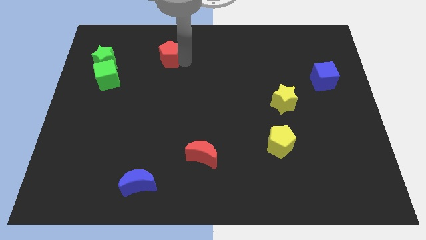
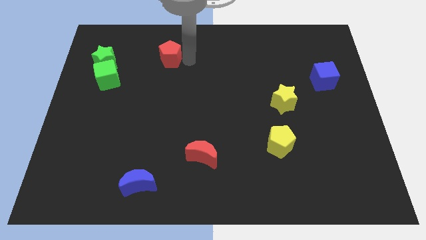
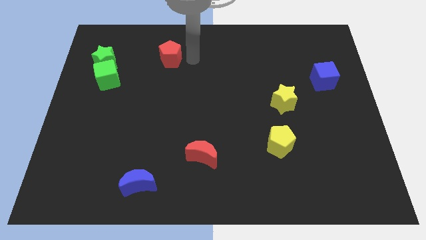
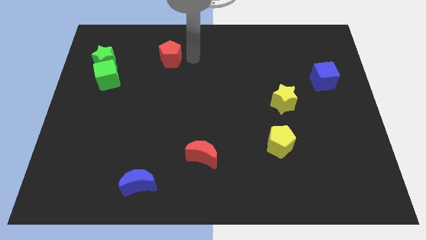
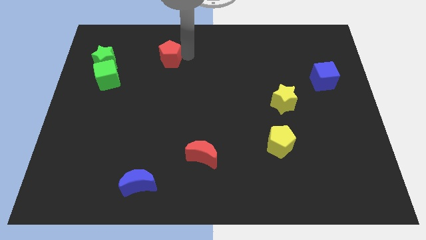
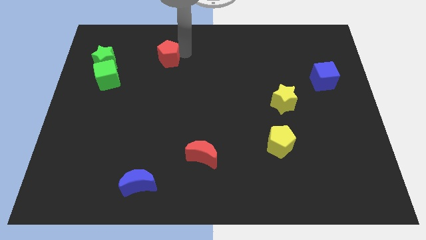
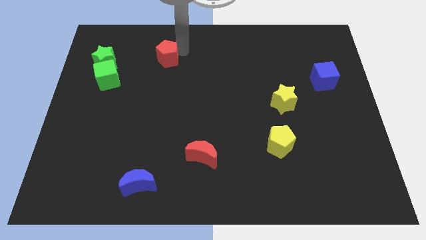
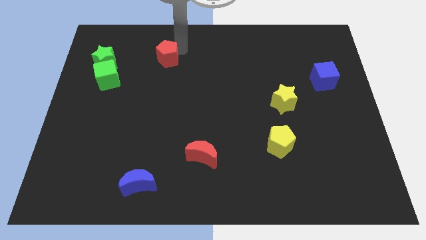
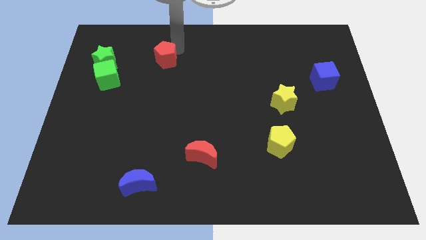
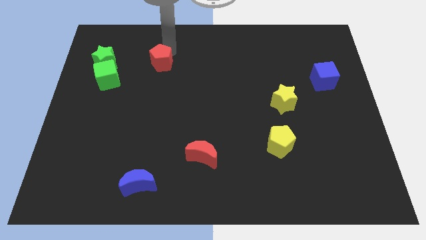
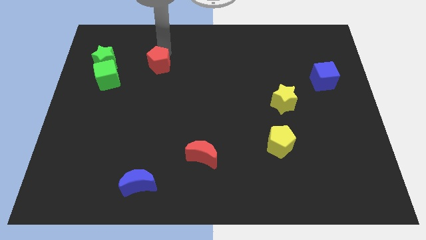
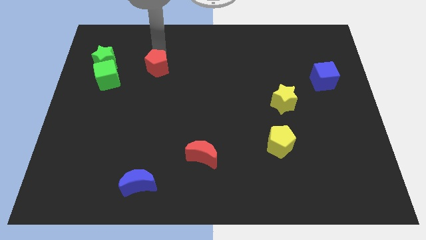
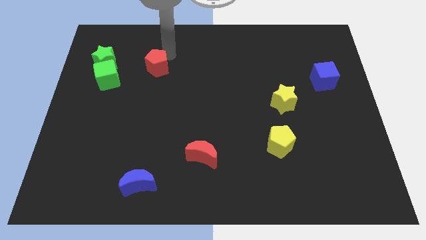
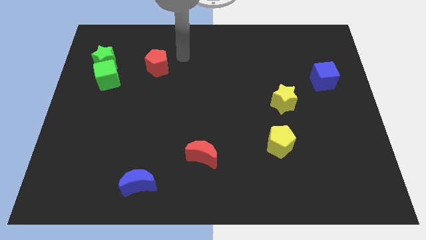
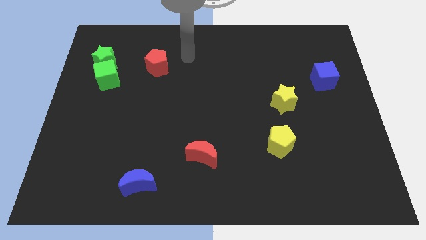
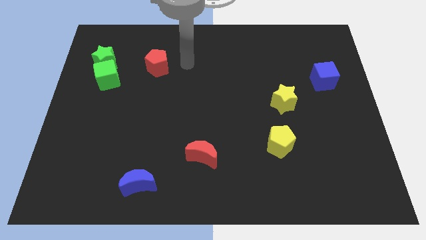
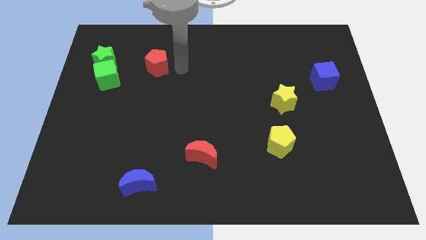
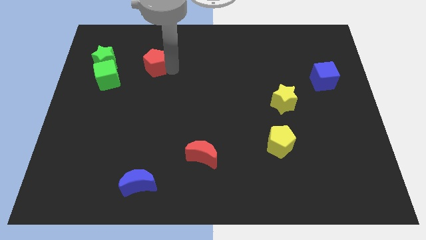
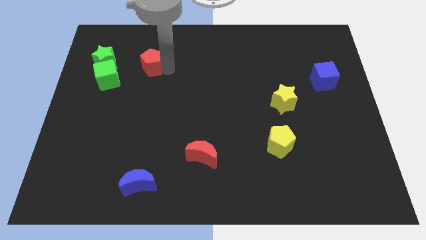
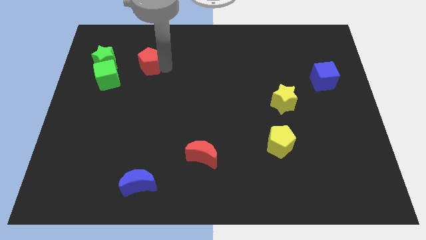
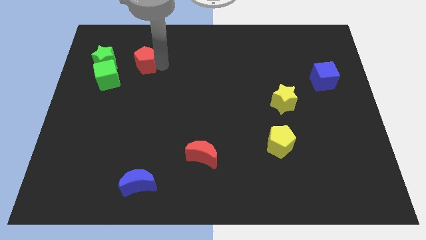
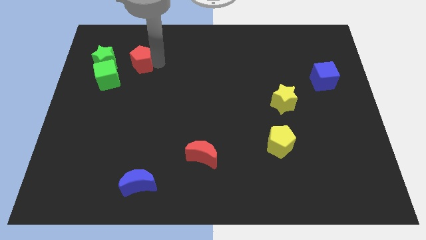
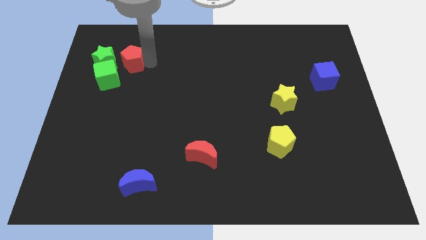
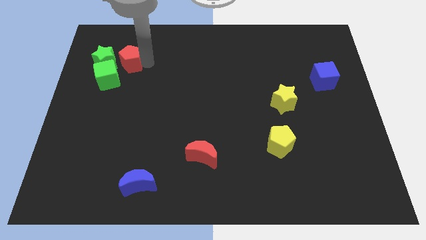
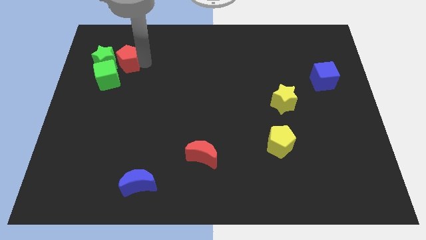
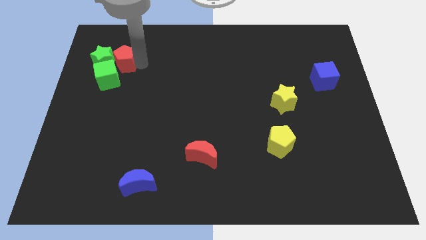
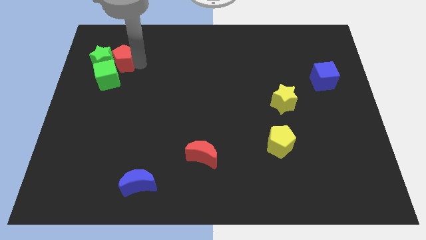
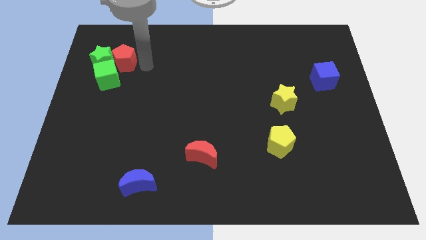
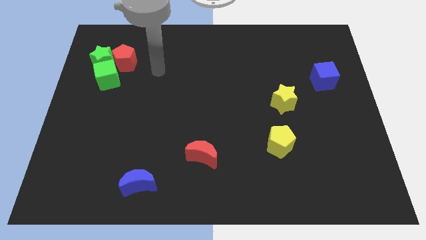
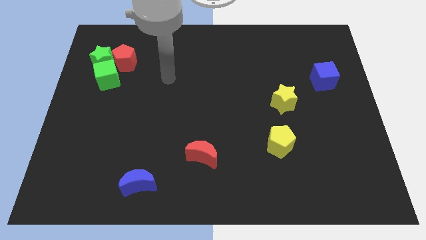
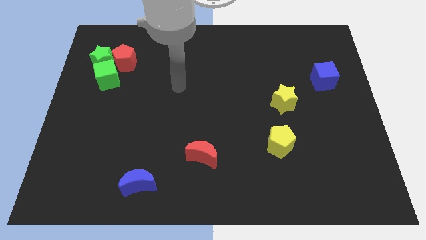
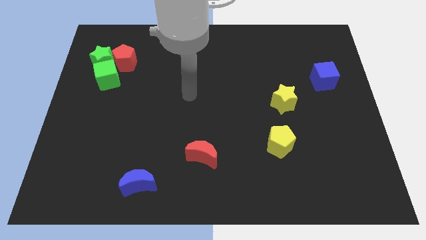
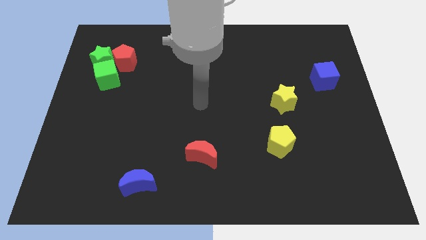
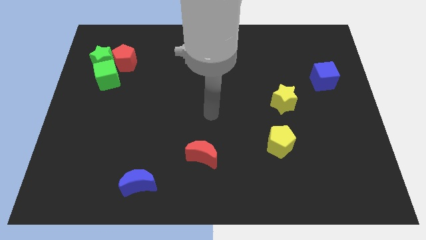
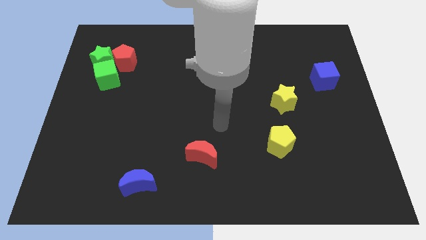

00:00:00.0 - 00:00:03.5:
push the red pentagon into the green star

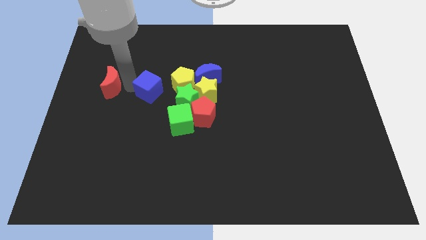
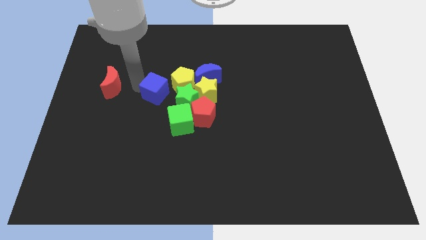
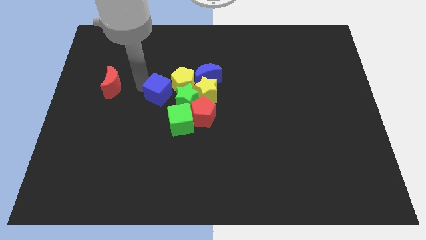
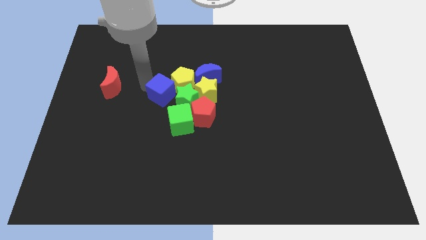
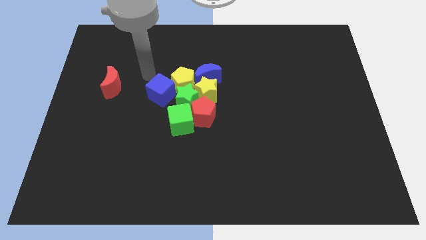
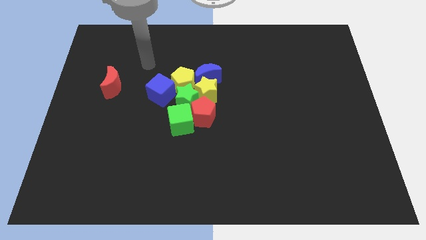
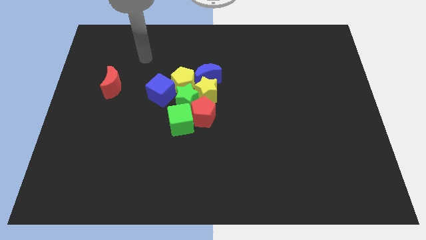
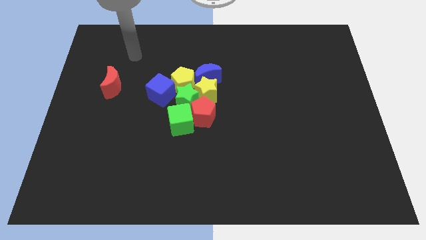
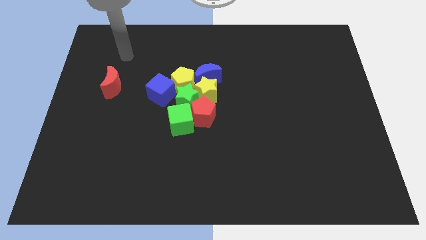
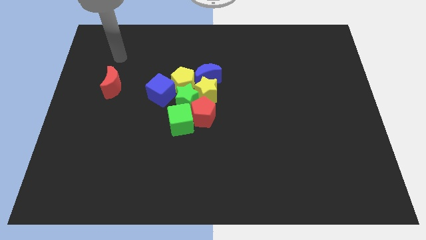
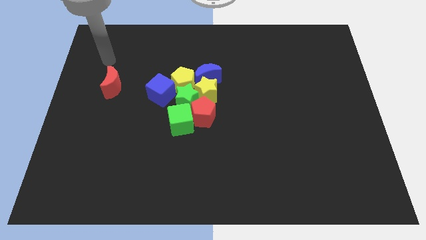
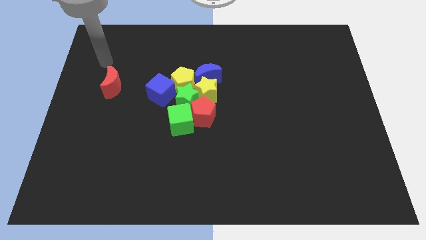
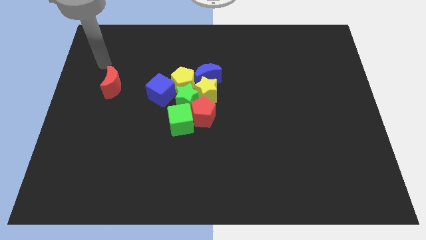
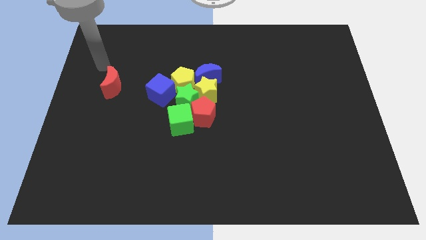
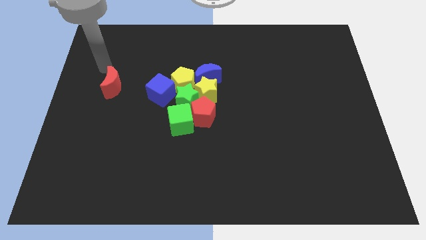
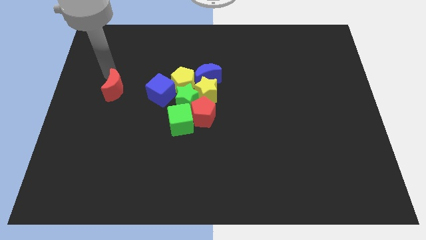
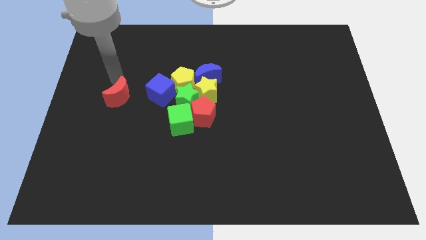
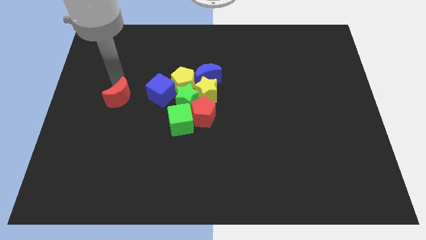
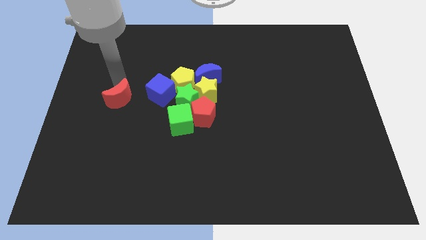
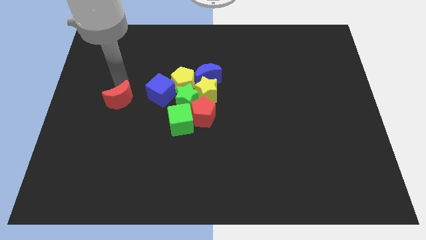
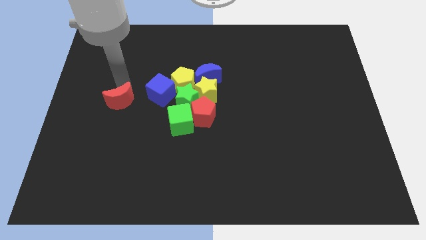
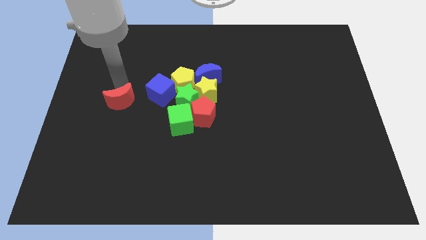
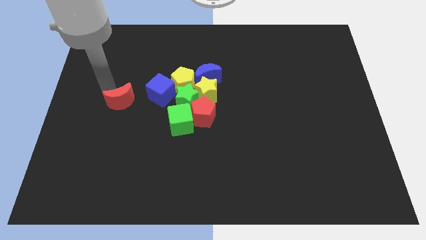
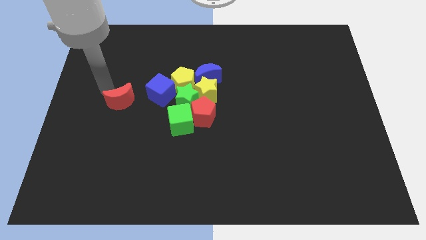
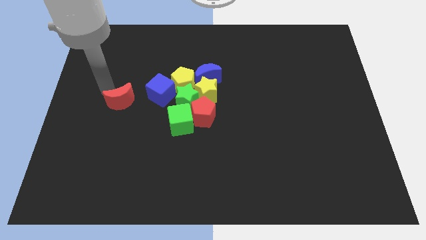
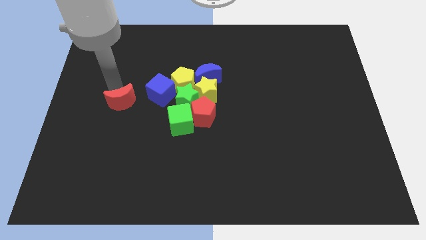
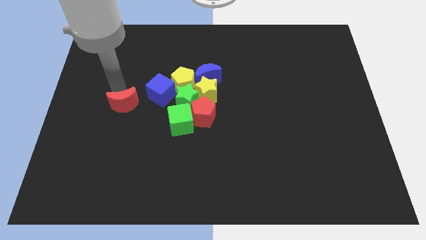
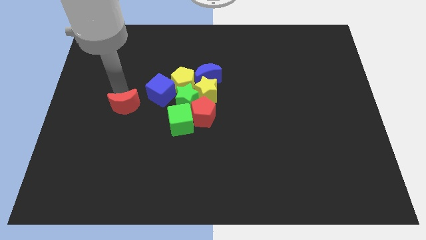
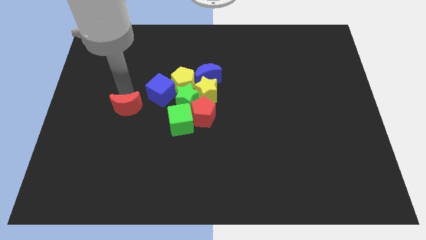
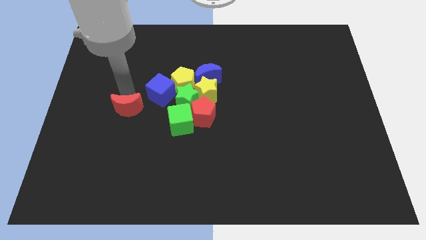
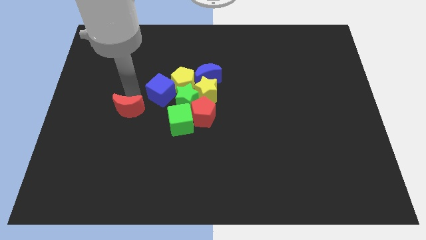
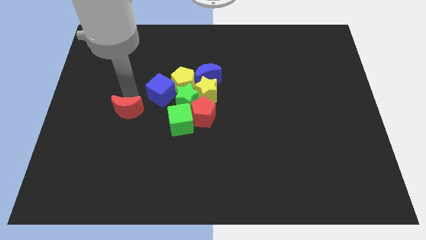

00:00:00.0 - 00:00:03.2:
move red moon downwards

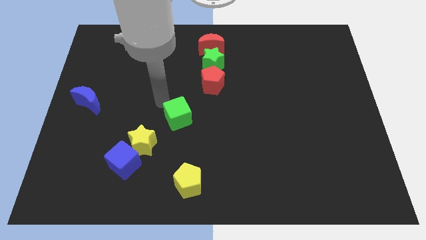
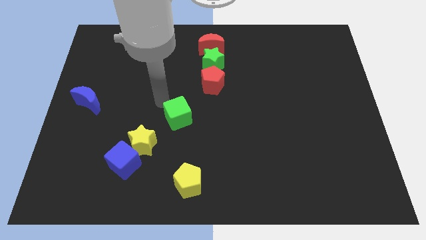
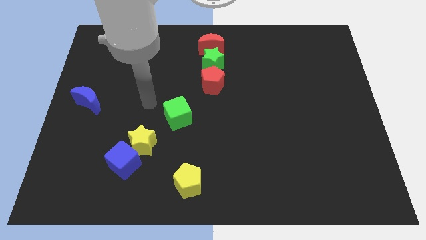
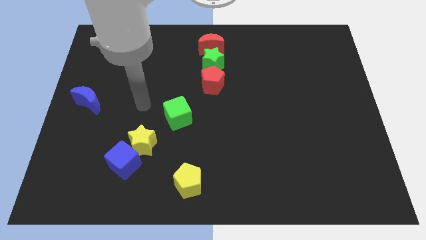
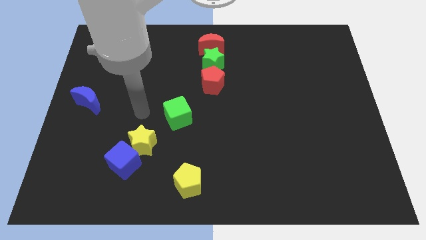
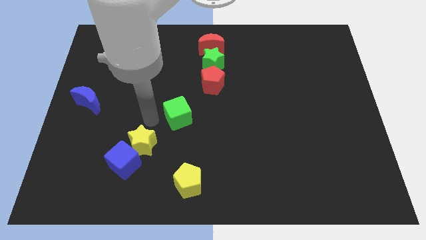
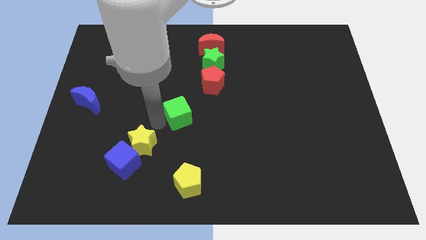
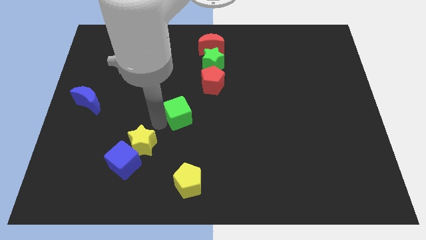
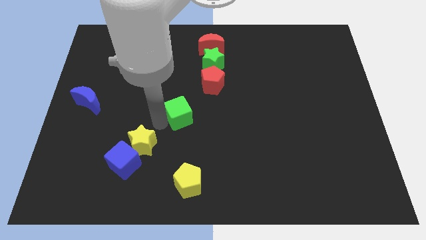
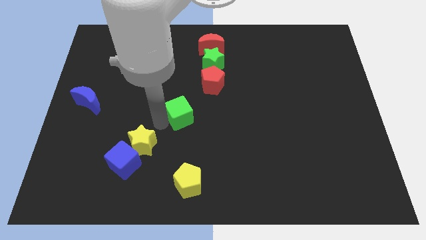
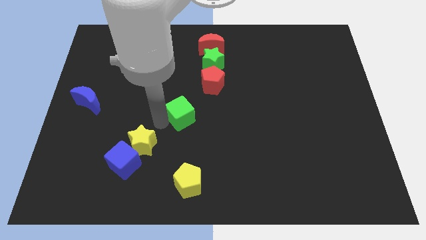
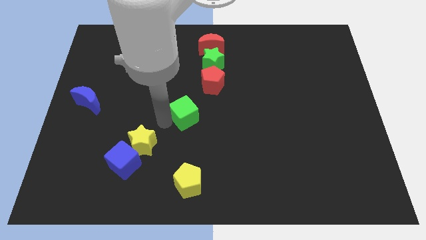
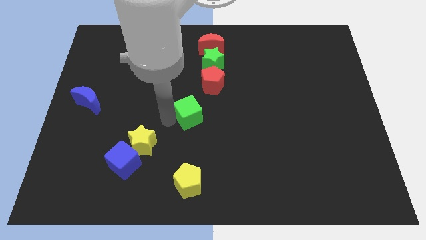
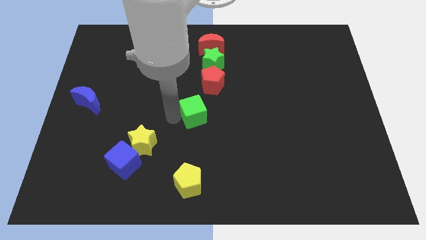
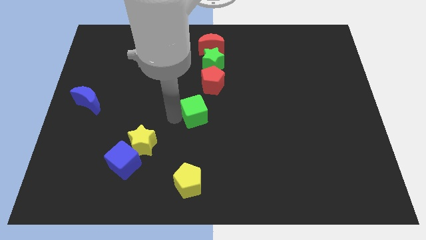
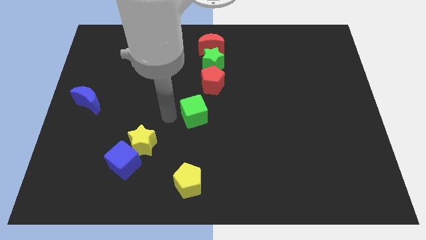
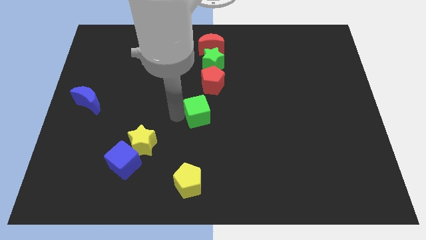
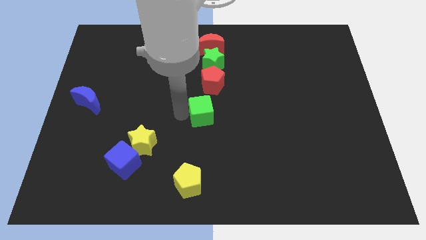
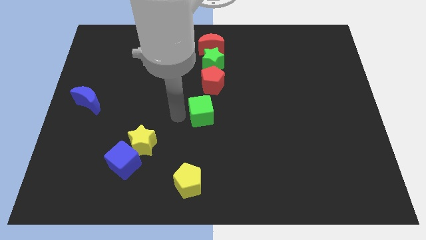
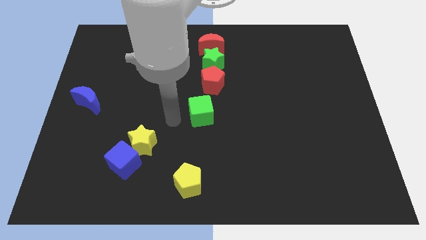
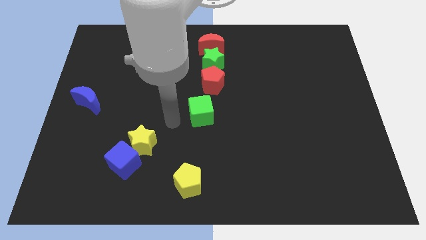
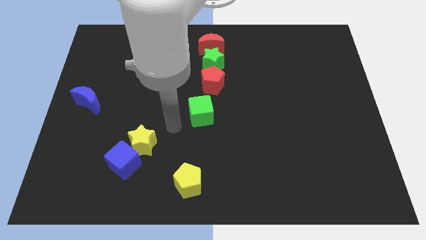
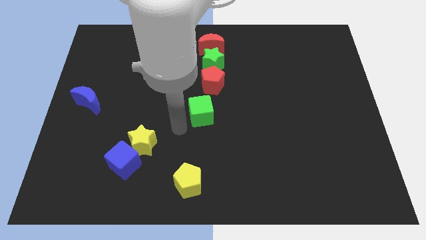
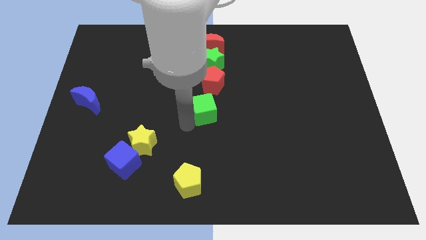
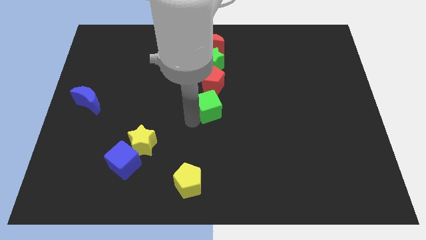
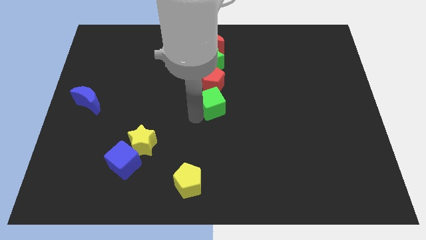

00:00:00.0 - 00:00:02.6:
move the green cube to the bottom of the red pentagon
